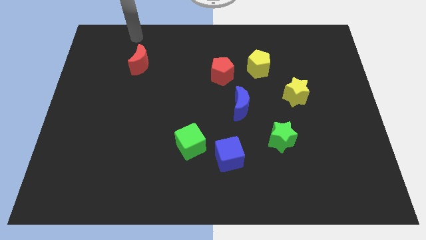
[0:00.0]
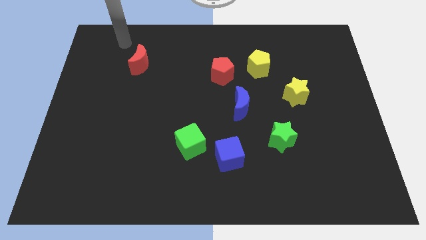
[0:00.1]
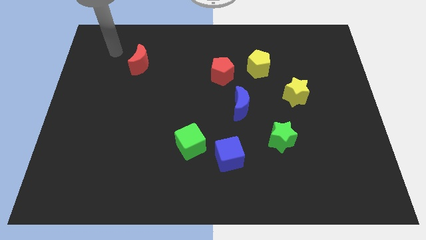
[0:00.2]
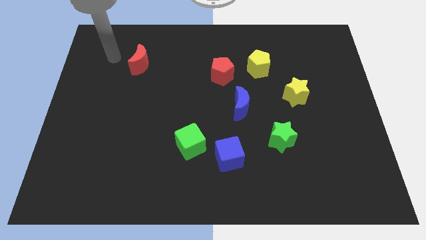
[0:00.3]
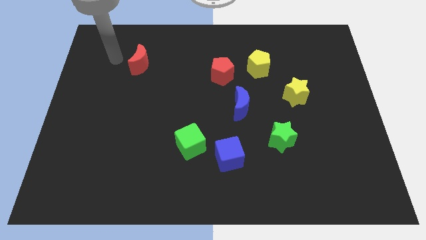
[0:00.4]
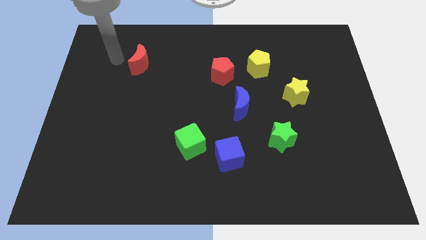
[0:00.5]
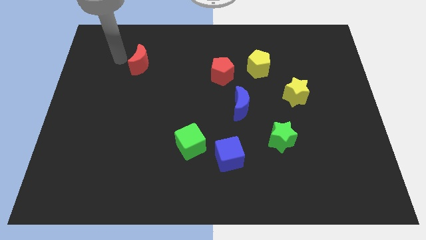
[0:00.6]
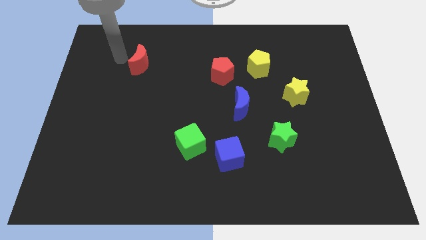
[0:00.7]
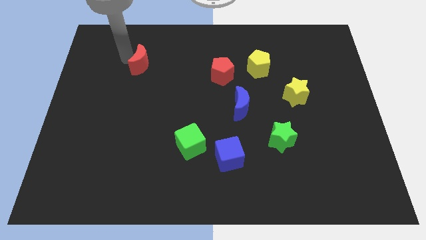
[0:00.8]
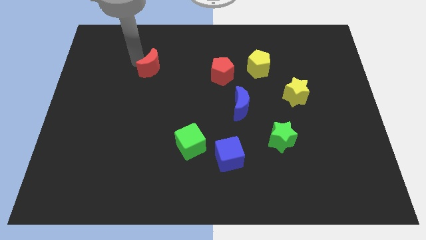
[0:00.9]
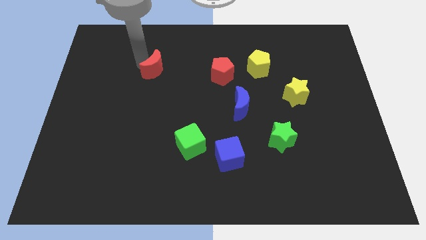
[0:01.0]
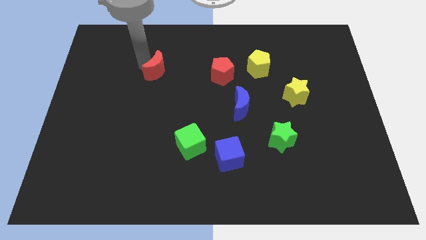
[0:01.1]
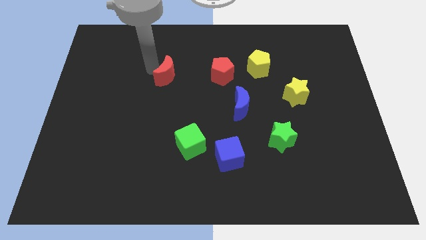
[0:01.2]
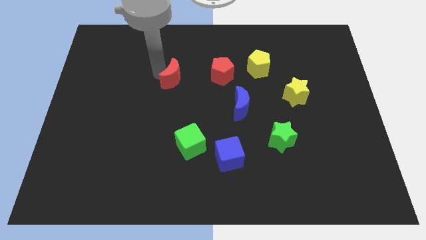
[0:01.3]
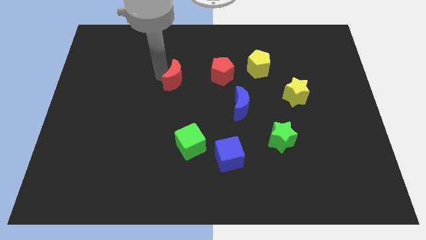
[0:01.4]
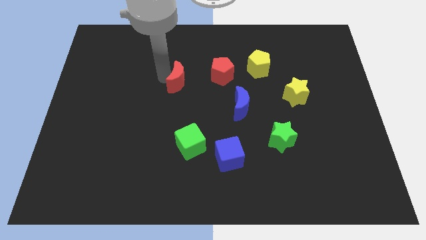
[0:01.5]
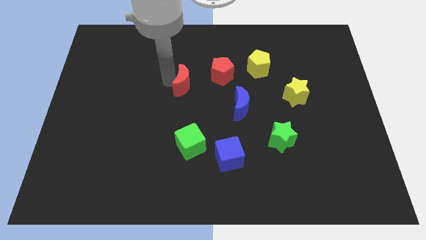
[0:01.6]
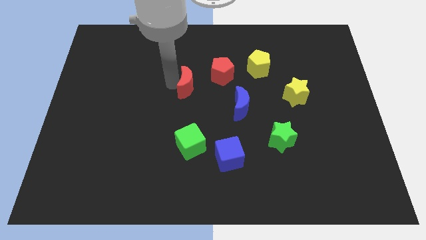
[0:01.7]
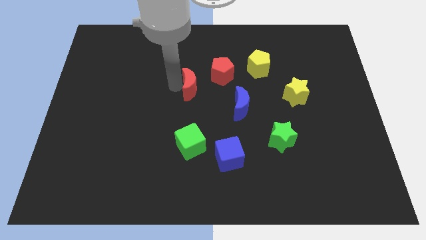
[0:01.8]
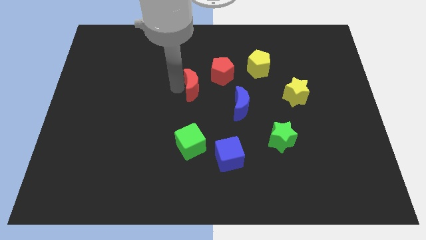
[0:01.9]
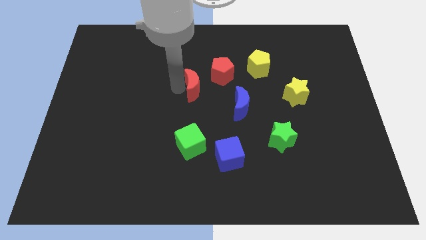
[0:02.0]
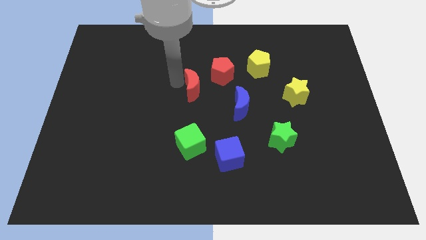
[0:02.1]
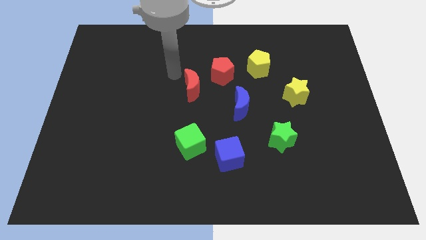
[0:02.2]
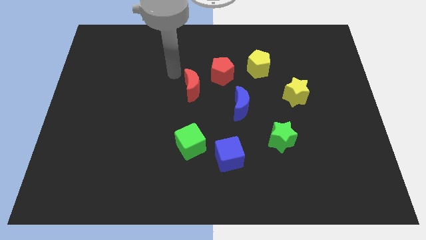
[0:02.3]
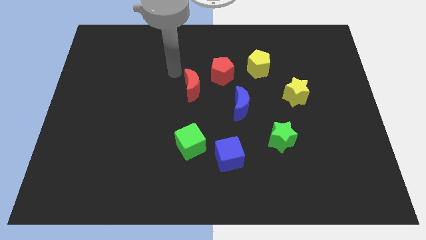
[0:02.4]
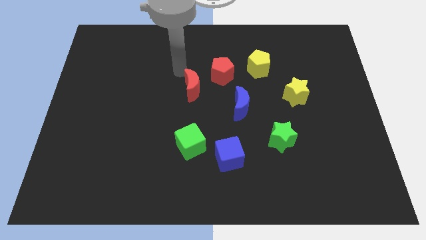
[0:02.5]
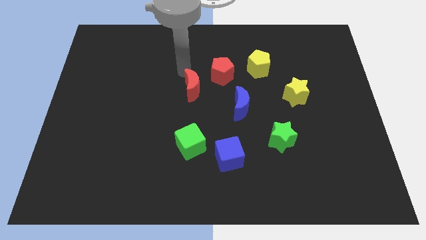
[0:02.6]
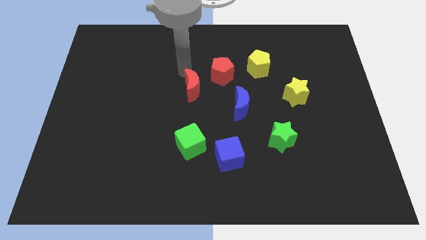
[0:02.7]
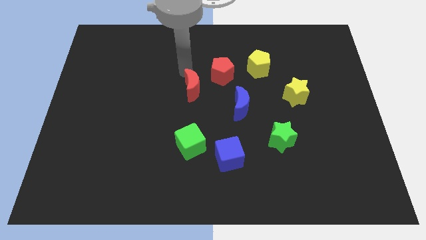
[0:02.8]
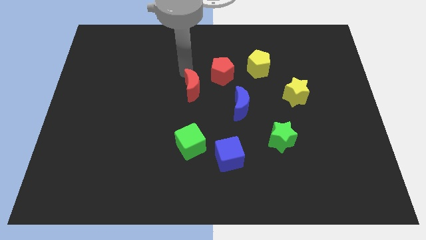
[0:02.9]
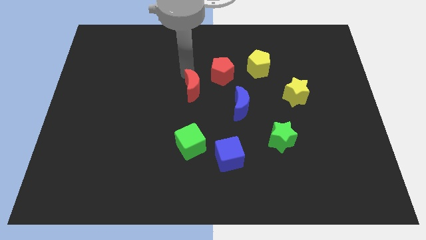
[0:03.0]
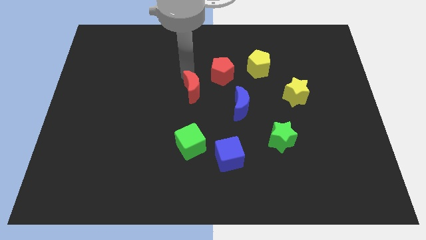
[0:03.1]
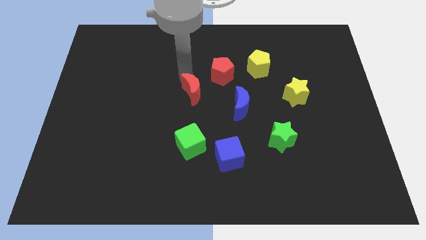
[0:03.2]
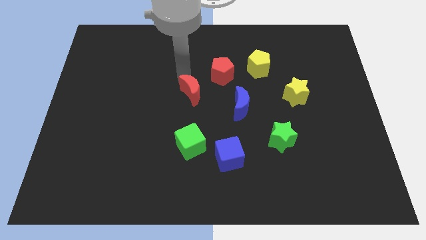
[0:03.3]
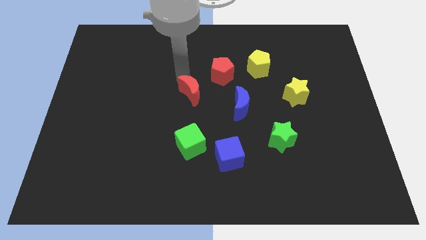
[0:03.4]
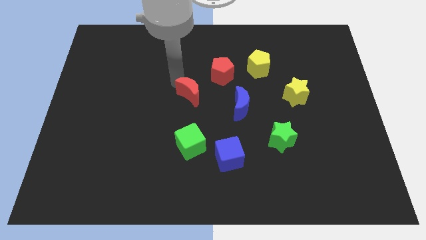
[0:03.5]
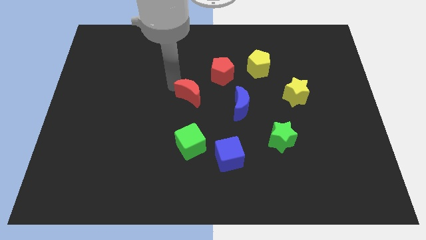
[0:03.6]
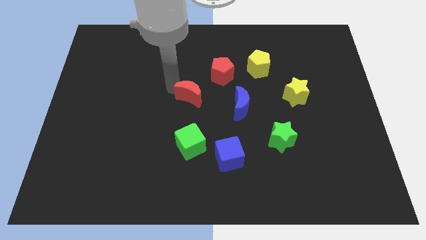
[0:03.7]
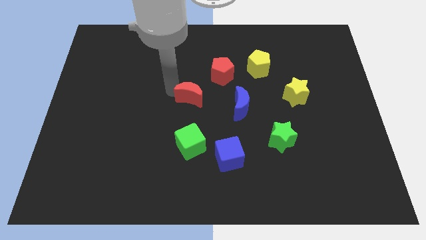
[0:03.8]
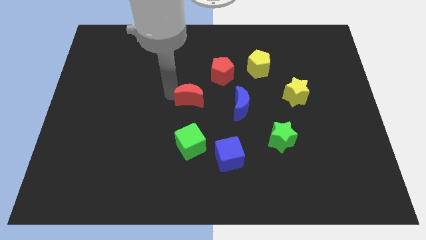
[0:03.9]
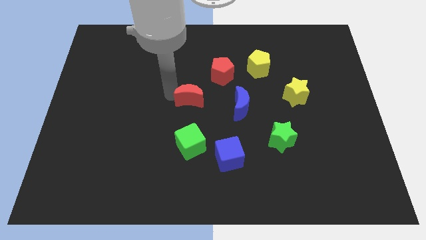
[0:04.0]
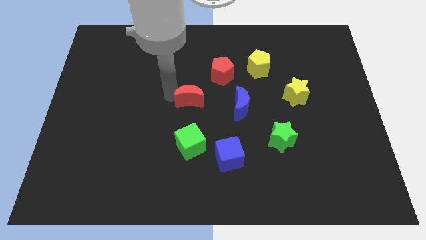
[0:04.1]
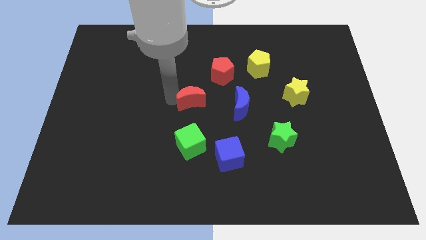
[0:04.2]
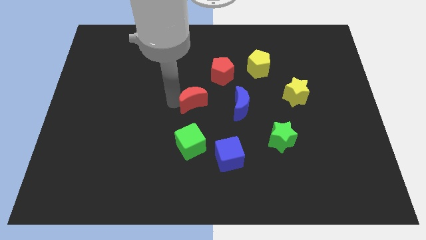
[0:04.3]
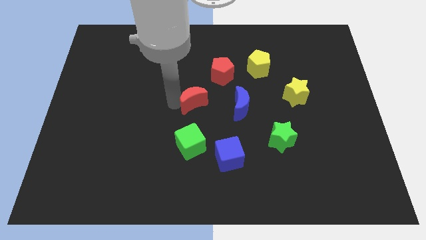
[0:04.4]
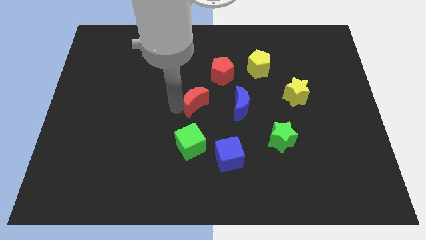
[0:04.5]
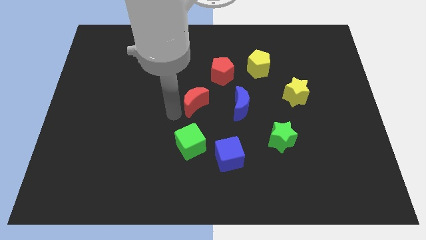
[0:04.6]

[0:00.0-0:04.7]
move the red crescent to the center of the board

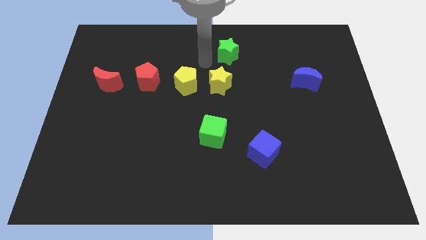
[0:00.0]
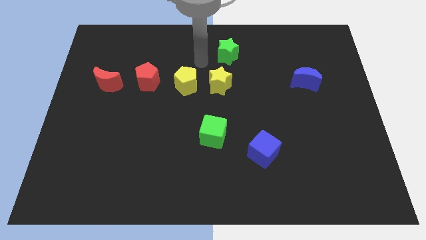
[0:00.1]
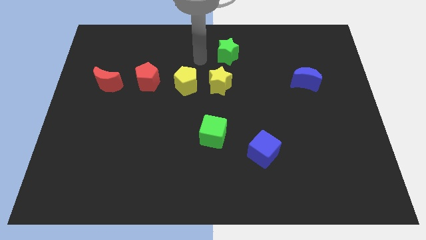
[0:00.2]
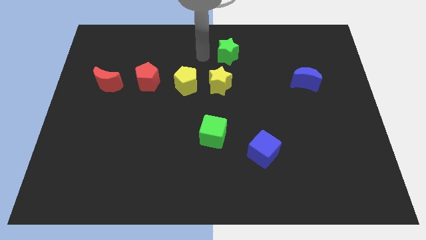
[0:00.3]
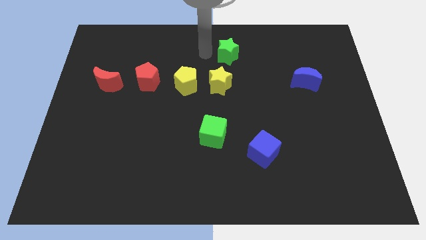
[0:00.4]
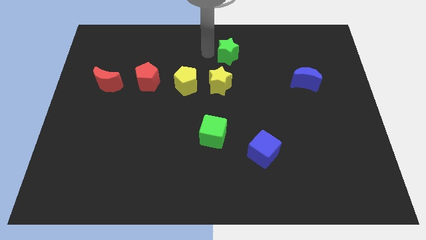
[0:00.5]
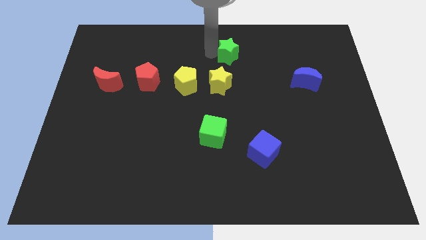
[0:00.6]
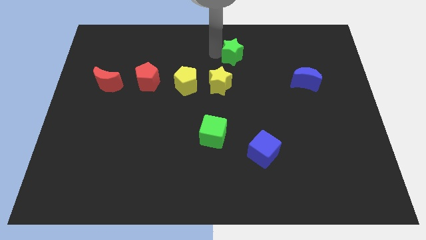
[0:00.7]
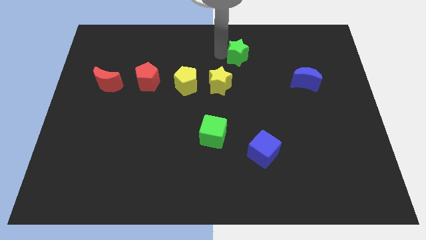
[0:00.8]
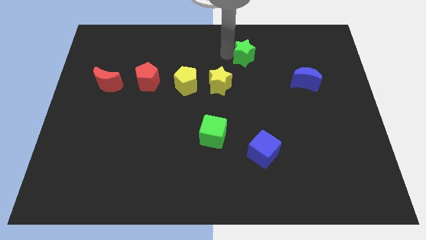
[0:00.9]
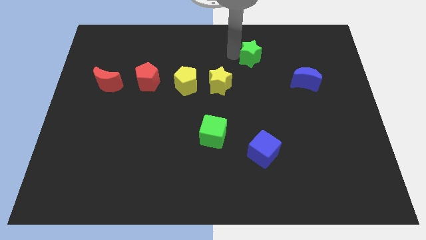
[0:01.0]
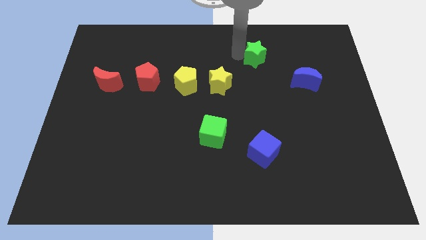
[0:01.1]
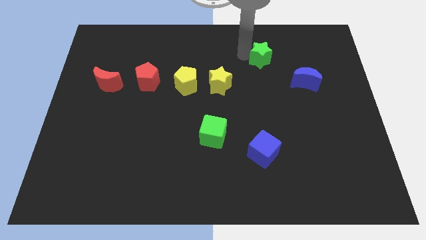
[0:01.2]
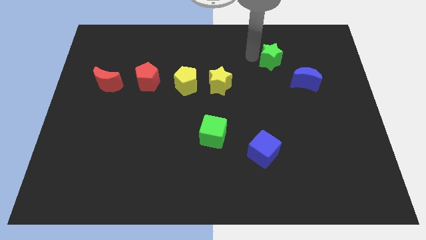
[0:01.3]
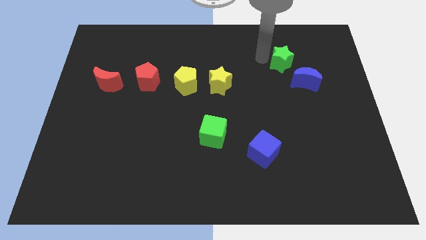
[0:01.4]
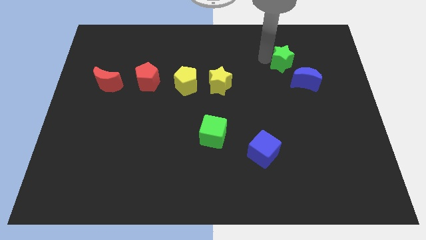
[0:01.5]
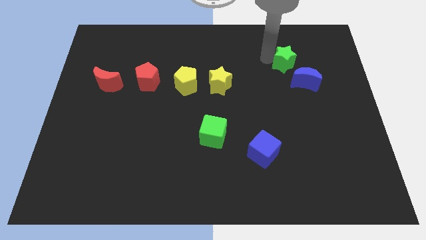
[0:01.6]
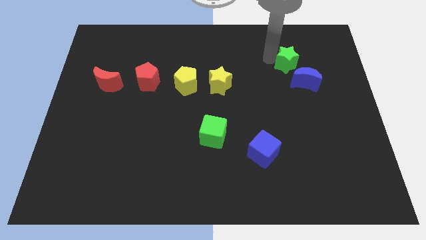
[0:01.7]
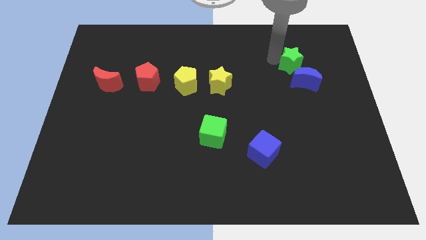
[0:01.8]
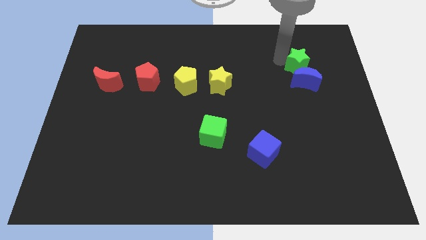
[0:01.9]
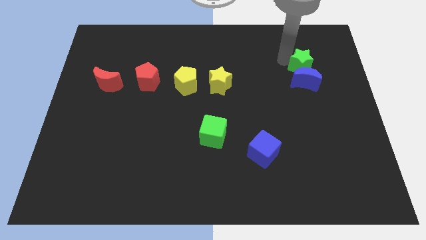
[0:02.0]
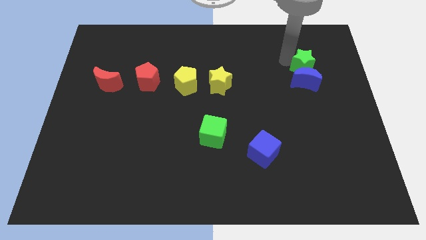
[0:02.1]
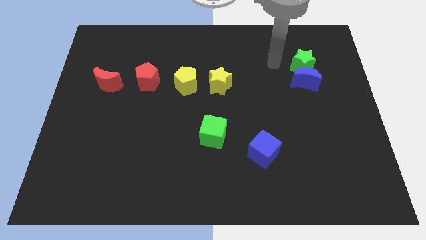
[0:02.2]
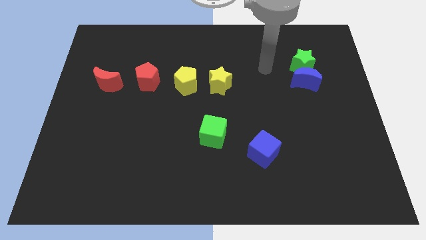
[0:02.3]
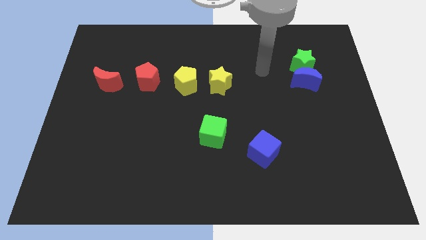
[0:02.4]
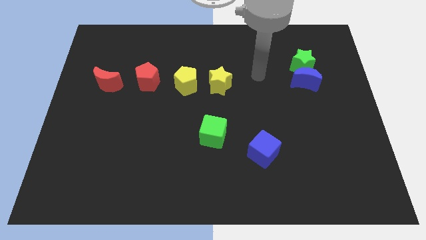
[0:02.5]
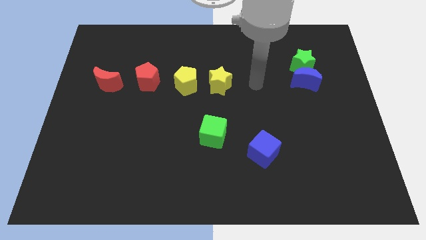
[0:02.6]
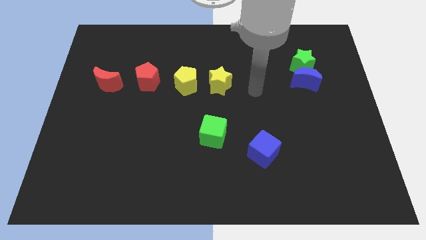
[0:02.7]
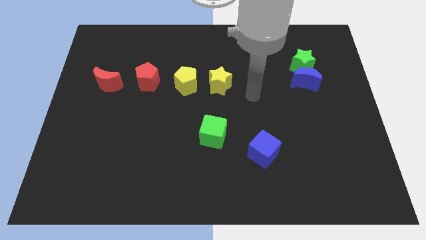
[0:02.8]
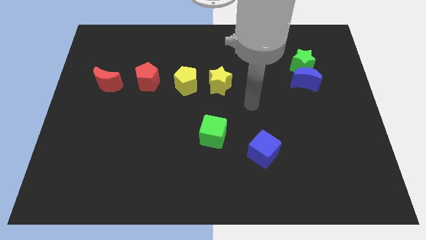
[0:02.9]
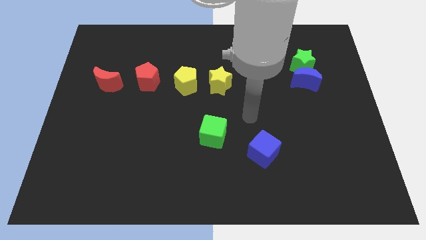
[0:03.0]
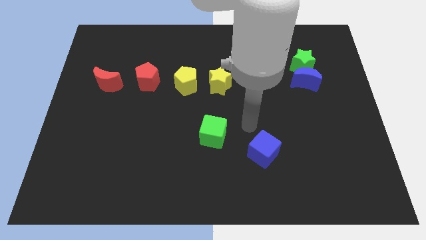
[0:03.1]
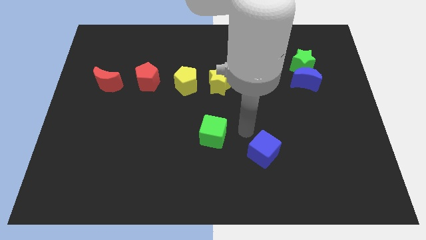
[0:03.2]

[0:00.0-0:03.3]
move the green star to the top of blue crescent

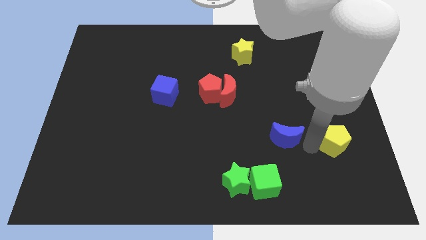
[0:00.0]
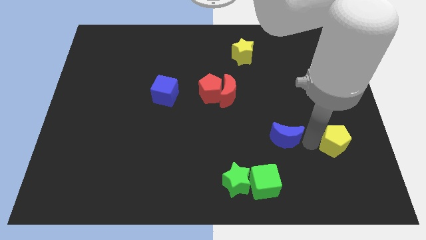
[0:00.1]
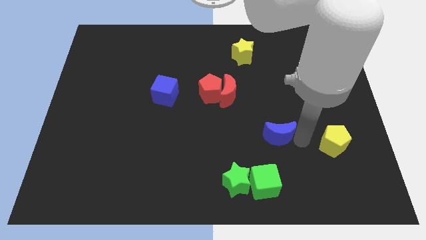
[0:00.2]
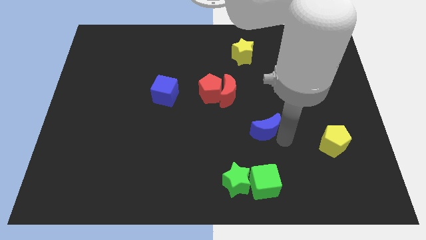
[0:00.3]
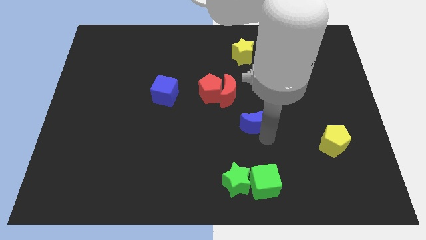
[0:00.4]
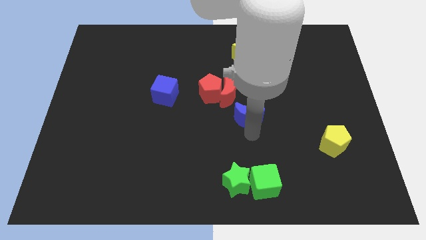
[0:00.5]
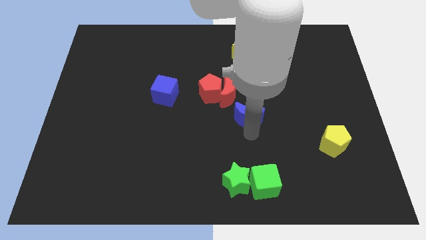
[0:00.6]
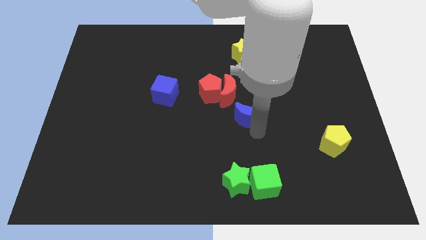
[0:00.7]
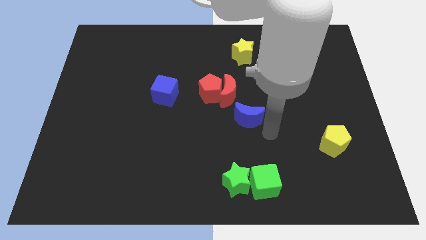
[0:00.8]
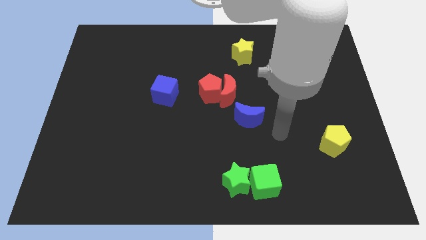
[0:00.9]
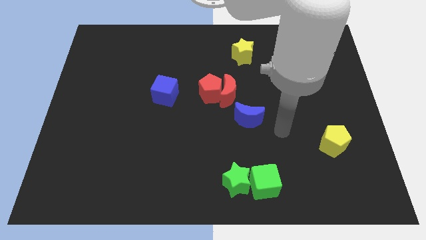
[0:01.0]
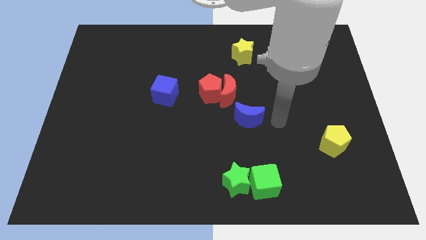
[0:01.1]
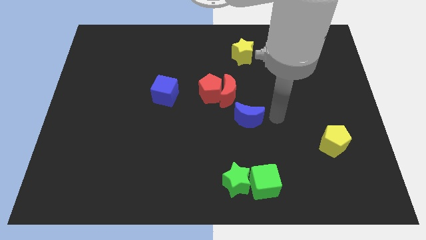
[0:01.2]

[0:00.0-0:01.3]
move the blue moon to the bottom right of the red moon
